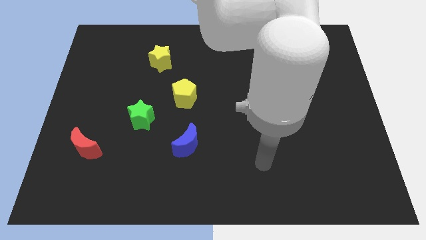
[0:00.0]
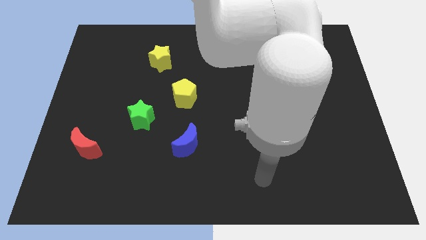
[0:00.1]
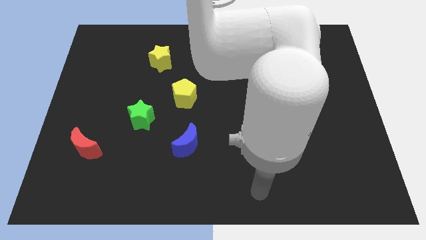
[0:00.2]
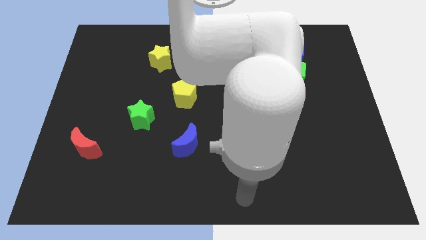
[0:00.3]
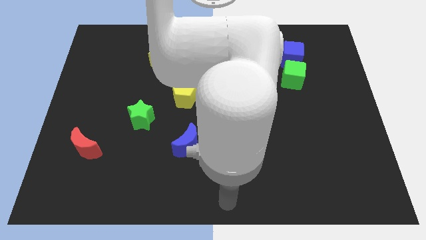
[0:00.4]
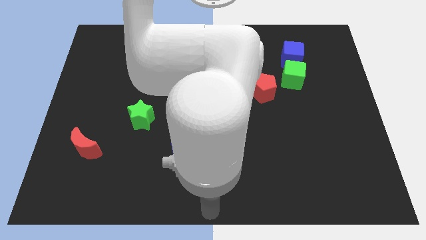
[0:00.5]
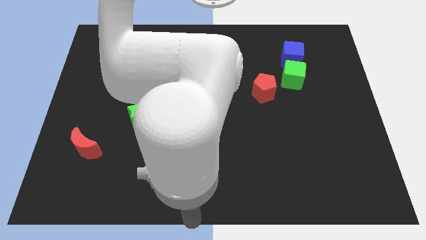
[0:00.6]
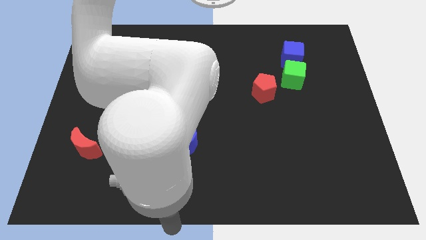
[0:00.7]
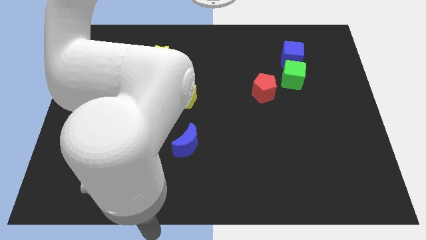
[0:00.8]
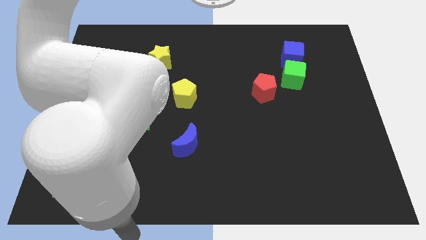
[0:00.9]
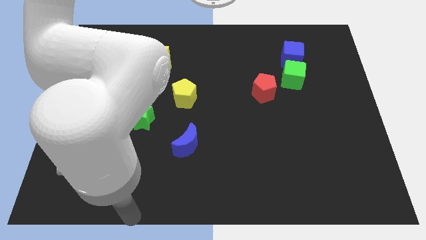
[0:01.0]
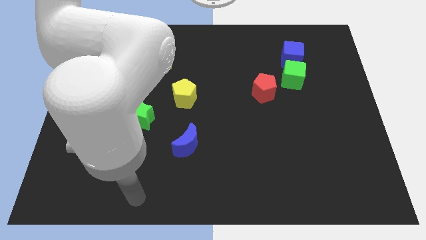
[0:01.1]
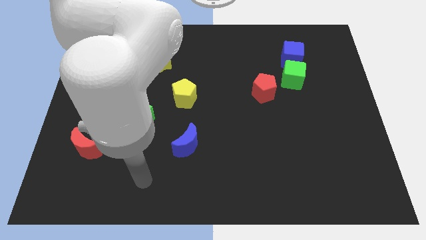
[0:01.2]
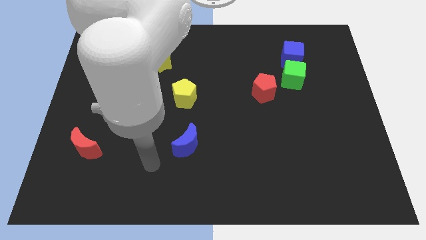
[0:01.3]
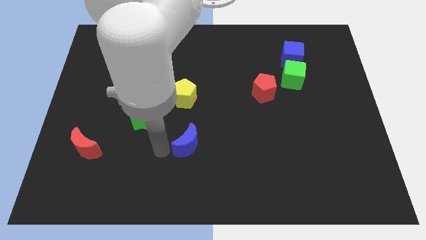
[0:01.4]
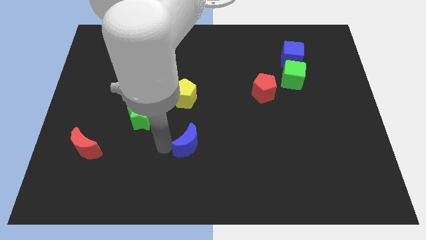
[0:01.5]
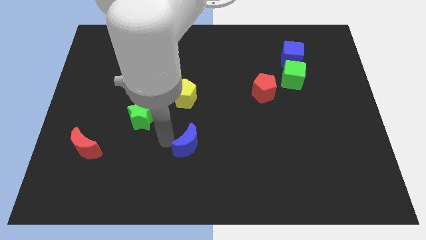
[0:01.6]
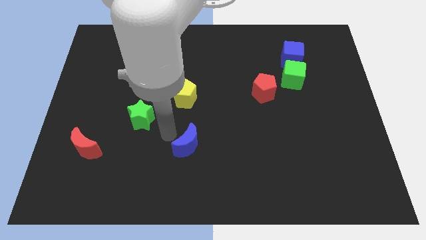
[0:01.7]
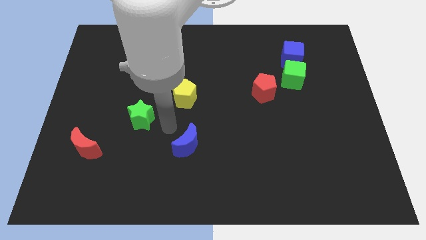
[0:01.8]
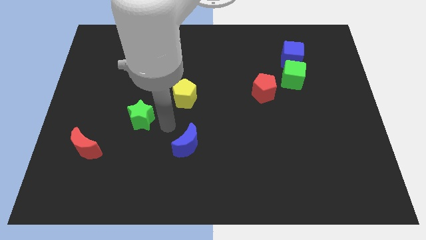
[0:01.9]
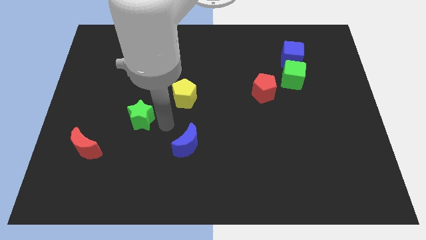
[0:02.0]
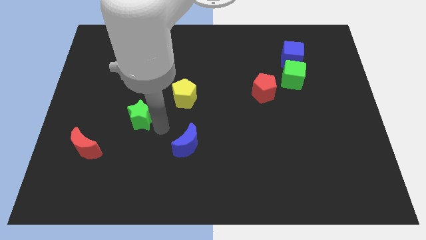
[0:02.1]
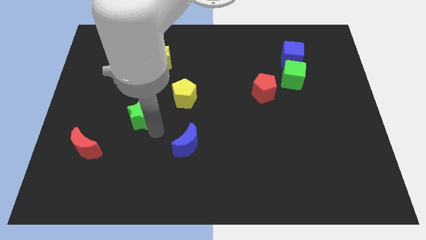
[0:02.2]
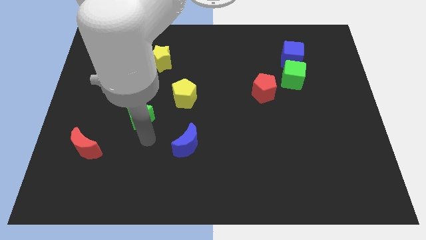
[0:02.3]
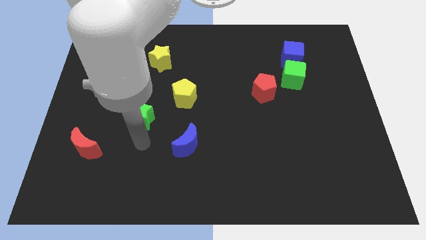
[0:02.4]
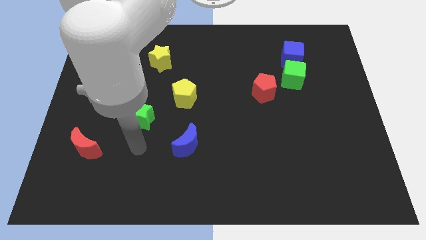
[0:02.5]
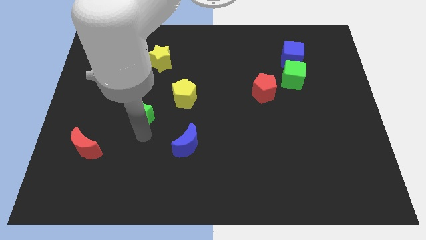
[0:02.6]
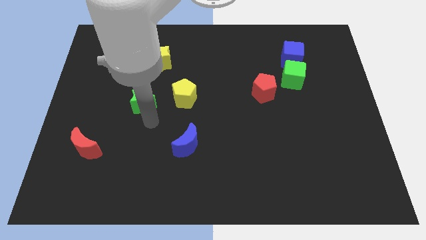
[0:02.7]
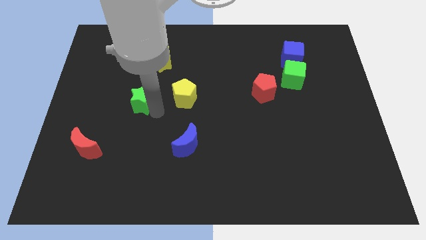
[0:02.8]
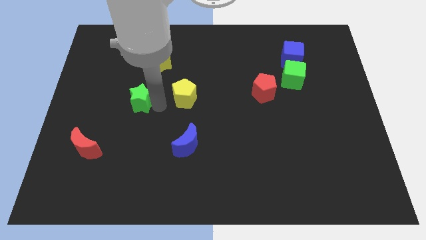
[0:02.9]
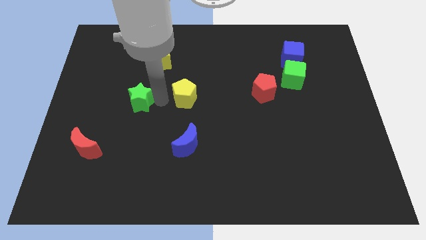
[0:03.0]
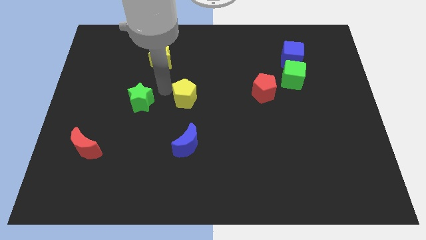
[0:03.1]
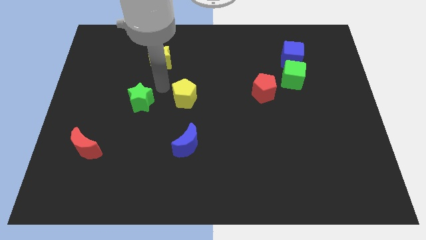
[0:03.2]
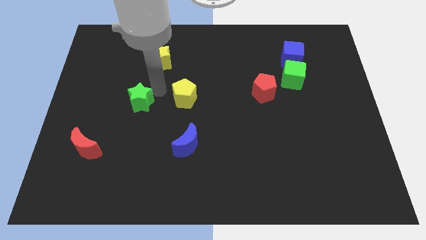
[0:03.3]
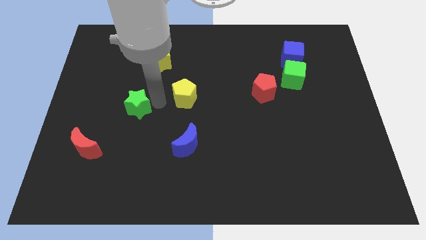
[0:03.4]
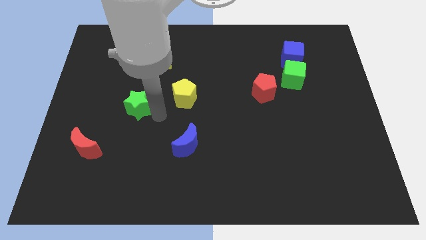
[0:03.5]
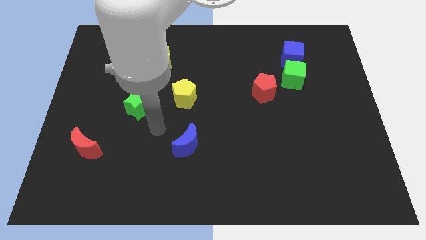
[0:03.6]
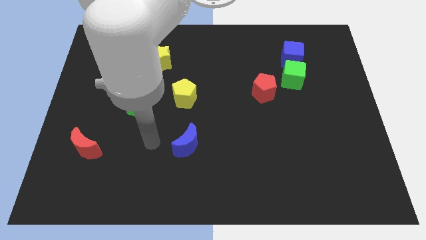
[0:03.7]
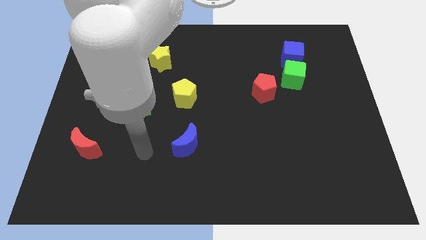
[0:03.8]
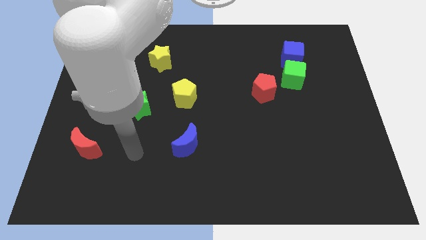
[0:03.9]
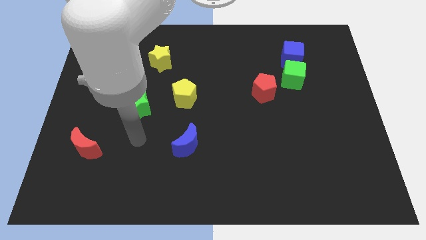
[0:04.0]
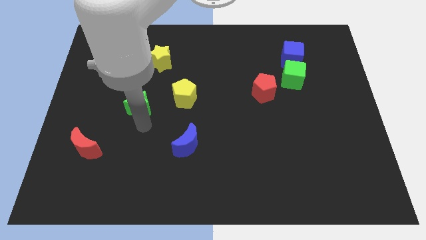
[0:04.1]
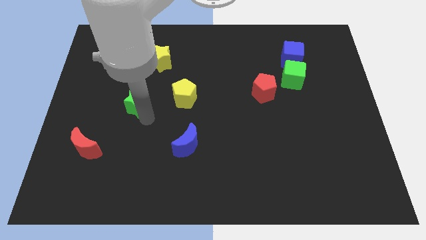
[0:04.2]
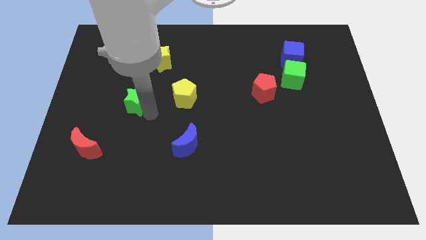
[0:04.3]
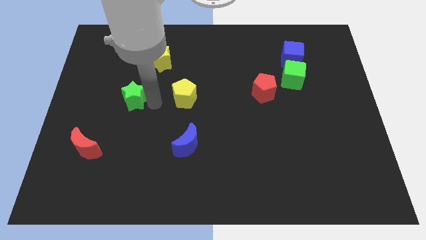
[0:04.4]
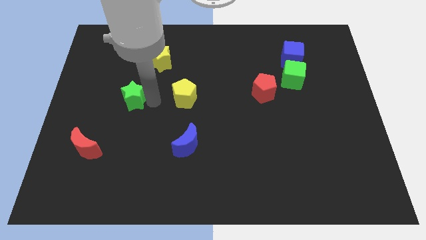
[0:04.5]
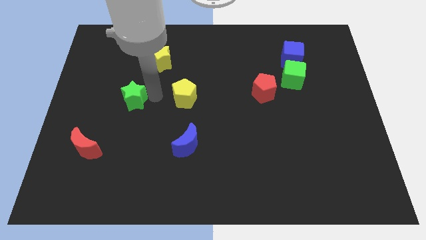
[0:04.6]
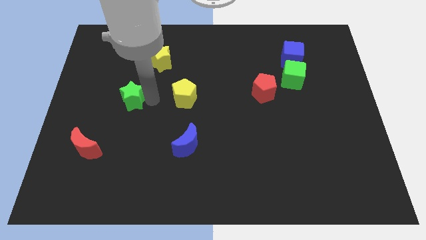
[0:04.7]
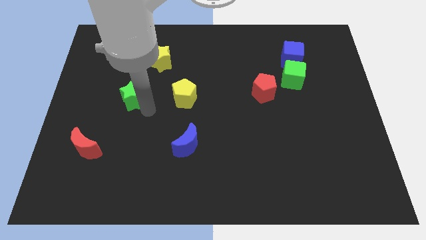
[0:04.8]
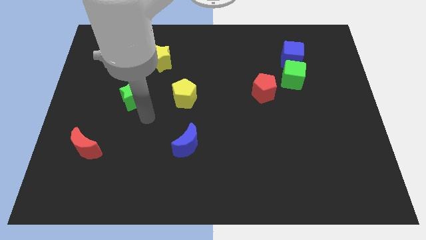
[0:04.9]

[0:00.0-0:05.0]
put the green star parallel left to the yellow pentagon

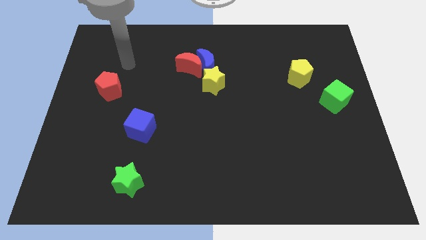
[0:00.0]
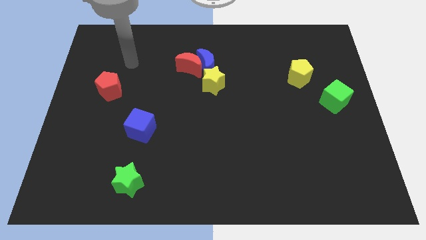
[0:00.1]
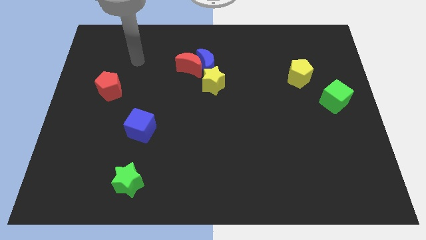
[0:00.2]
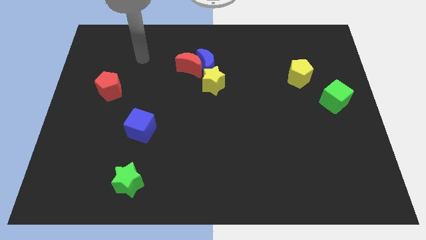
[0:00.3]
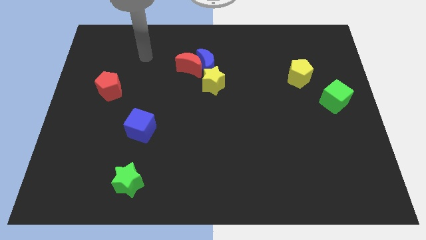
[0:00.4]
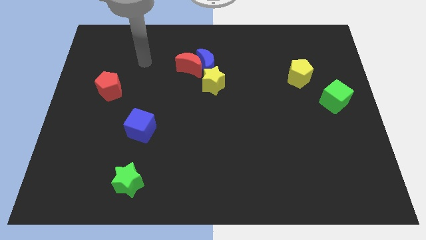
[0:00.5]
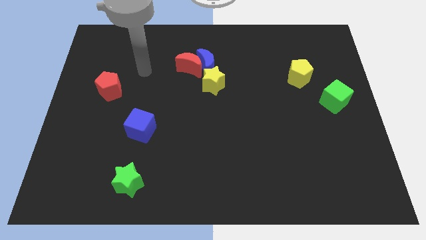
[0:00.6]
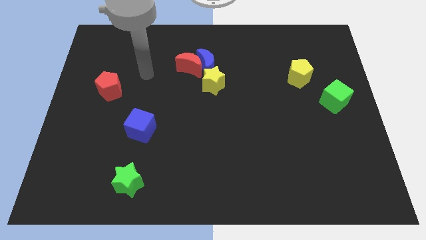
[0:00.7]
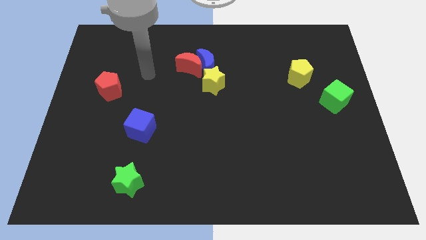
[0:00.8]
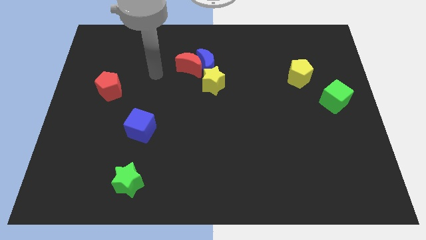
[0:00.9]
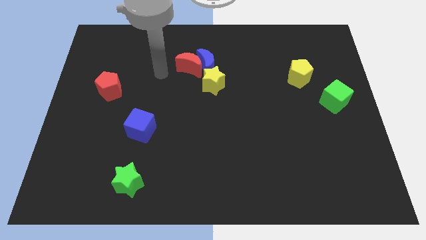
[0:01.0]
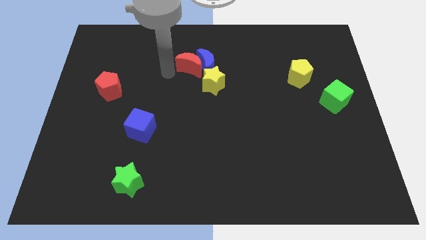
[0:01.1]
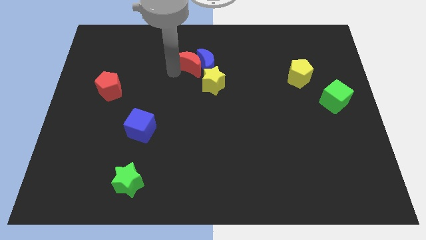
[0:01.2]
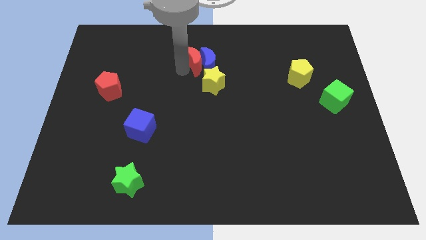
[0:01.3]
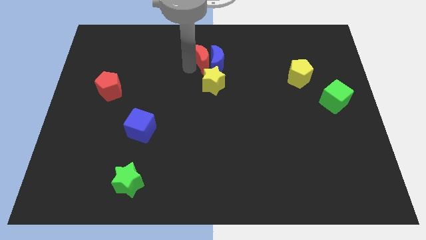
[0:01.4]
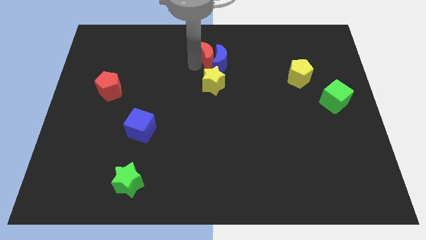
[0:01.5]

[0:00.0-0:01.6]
push red moon towards its right

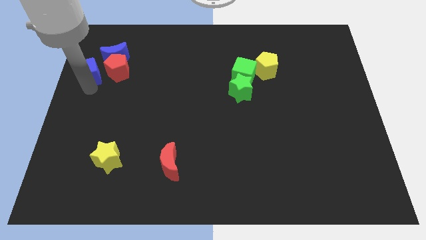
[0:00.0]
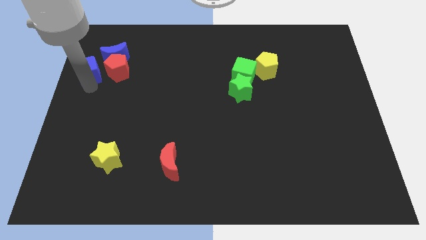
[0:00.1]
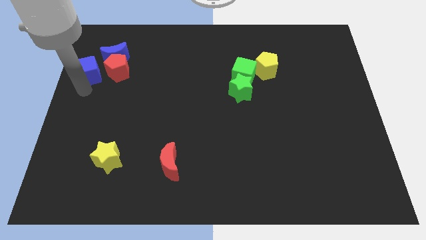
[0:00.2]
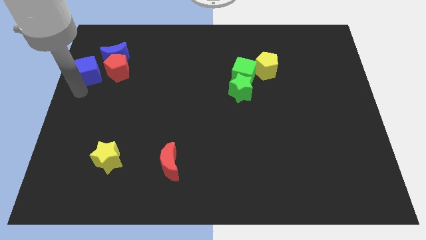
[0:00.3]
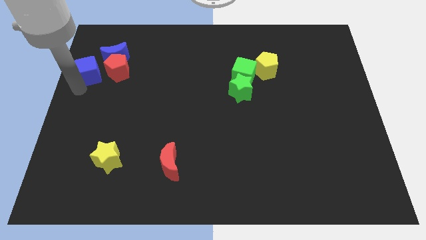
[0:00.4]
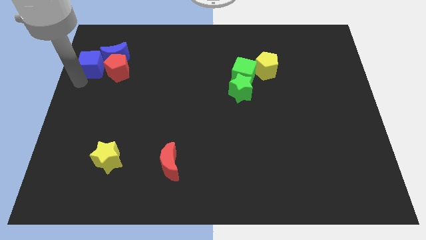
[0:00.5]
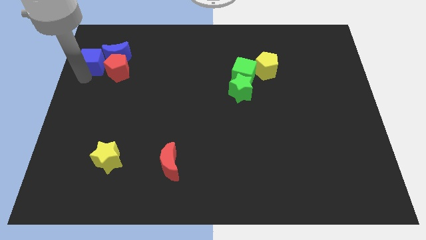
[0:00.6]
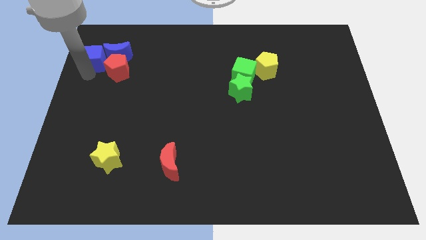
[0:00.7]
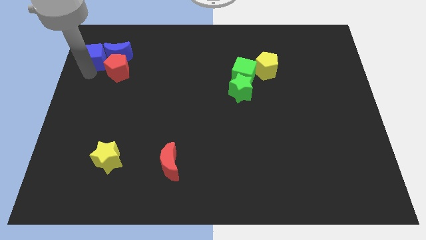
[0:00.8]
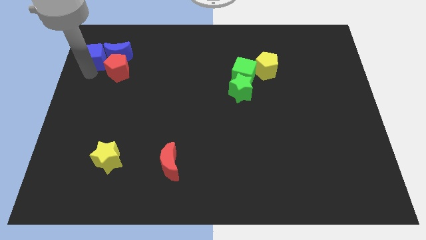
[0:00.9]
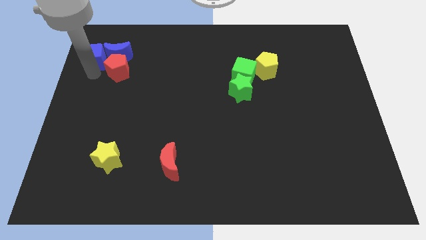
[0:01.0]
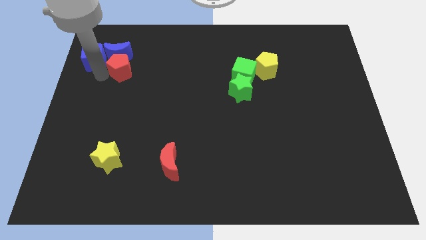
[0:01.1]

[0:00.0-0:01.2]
move the blue cube into the blue crescent

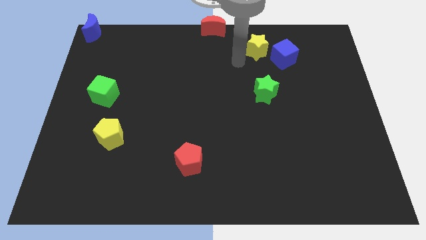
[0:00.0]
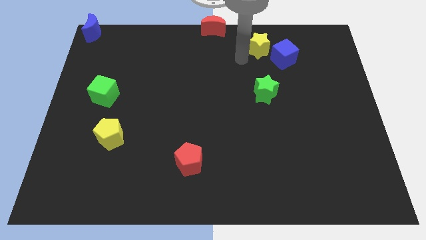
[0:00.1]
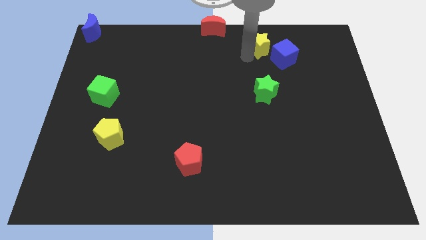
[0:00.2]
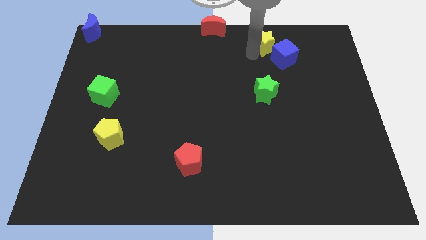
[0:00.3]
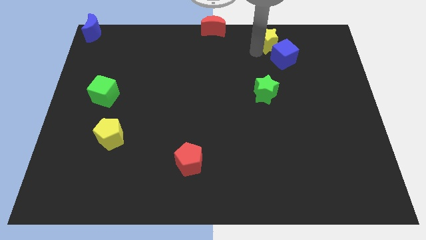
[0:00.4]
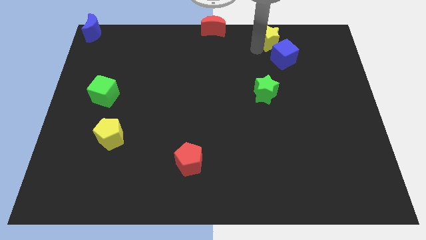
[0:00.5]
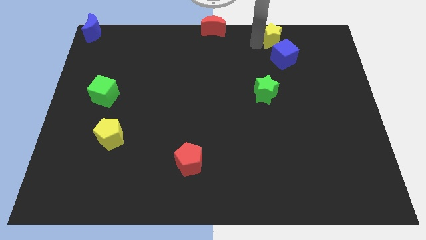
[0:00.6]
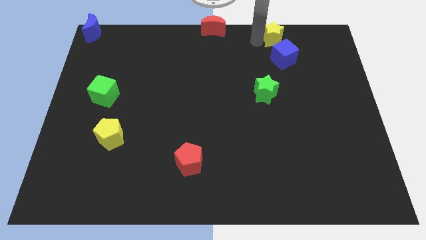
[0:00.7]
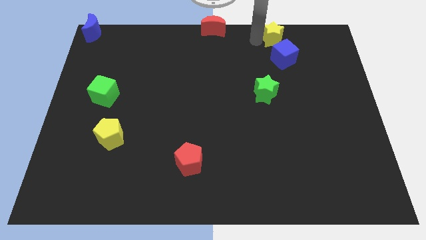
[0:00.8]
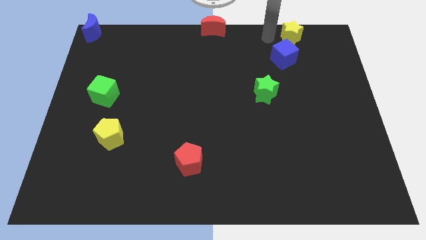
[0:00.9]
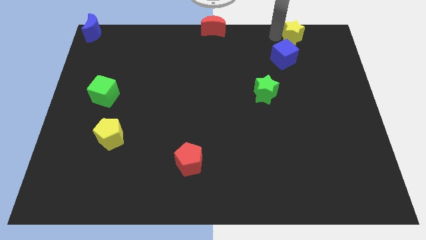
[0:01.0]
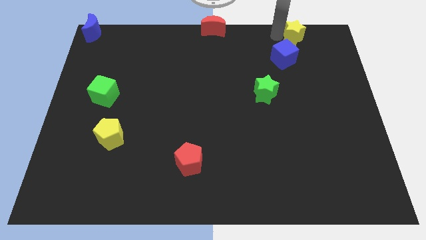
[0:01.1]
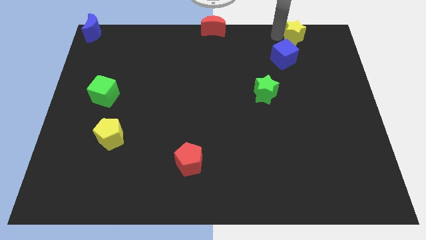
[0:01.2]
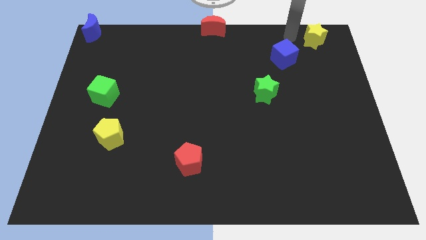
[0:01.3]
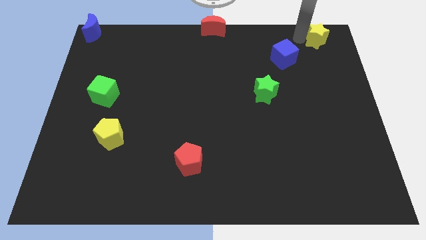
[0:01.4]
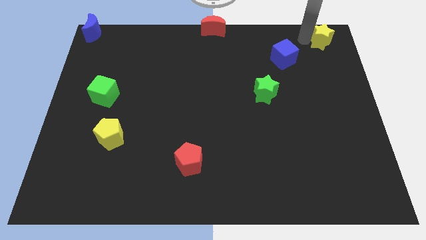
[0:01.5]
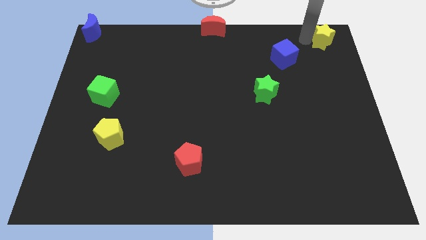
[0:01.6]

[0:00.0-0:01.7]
push the yellow star to the top right of the board
